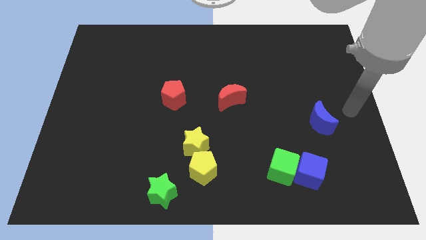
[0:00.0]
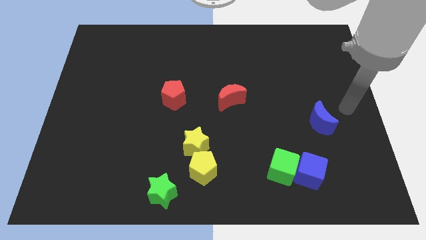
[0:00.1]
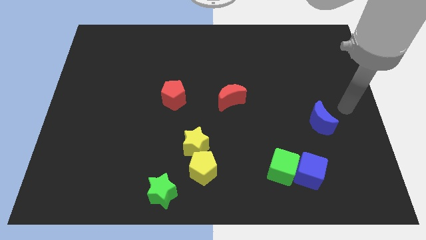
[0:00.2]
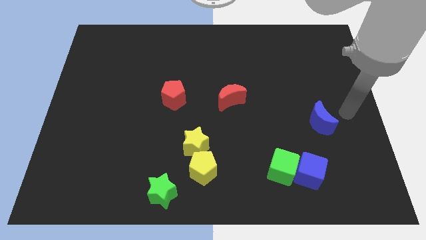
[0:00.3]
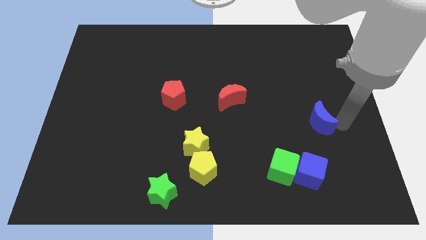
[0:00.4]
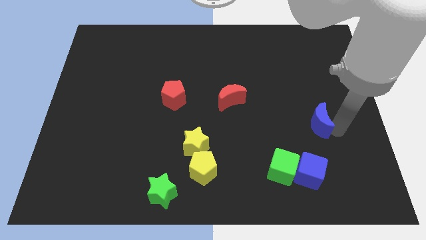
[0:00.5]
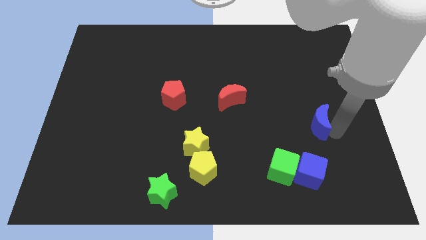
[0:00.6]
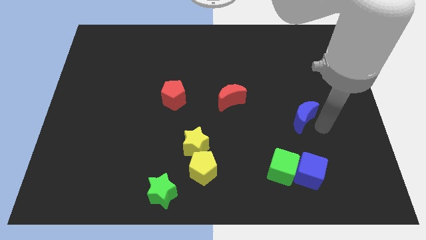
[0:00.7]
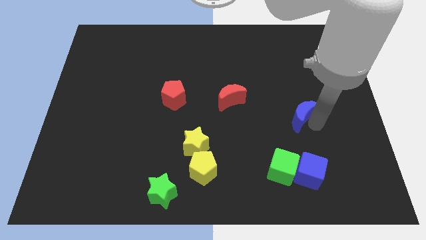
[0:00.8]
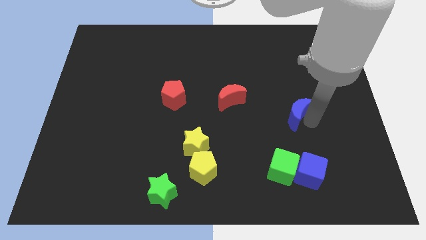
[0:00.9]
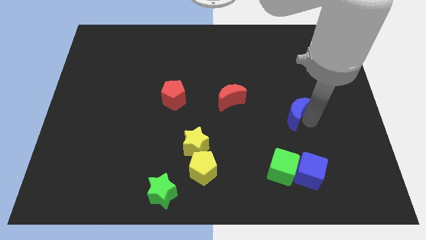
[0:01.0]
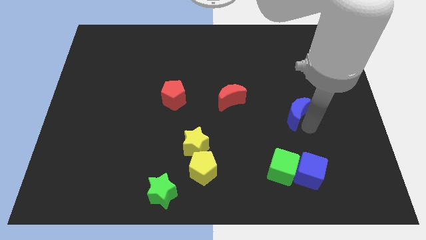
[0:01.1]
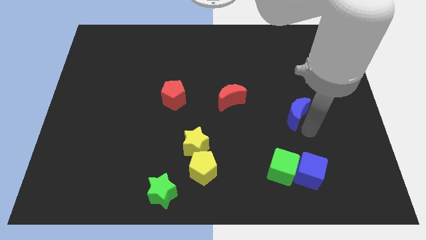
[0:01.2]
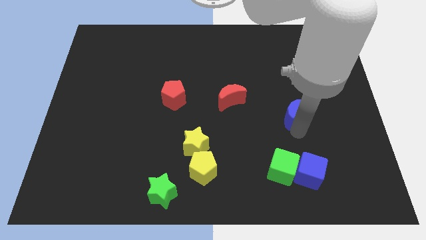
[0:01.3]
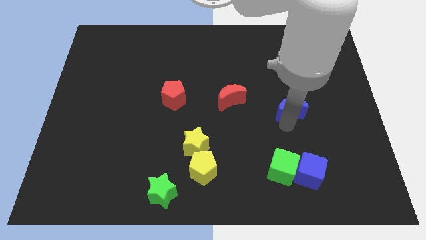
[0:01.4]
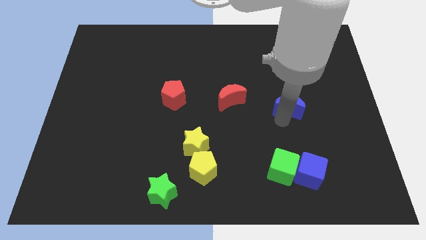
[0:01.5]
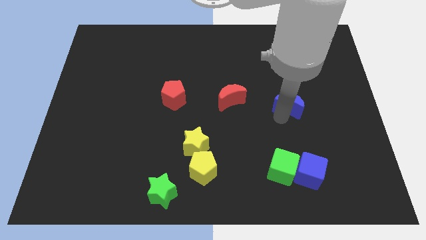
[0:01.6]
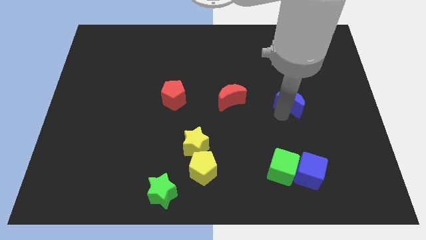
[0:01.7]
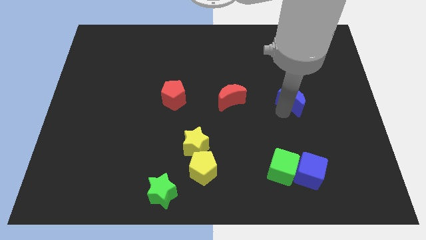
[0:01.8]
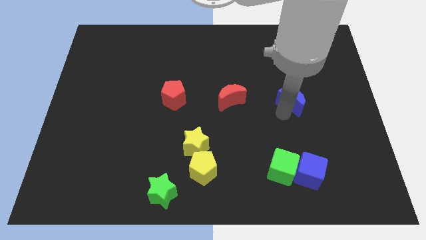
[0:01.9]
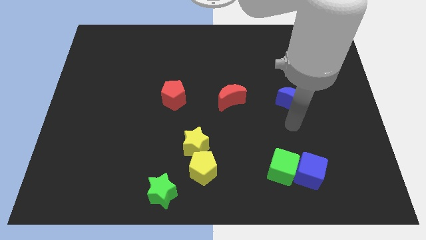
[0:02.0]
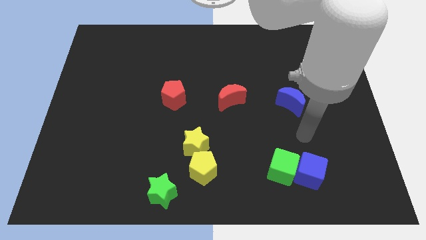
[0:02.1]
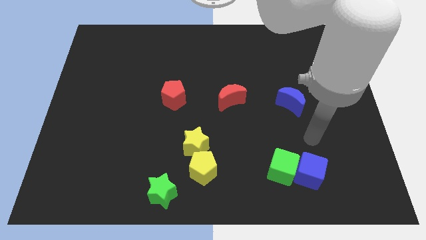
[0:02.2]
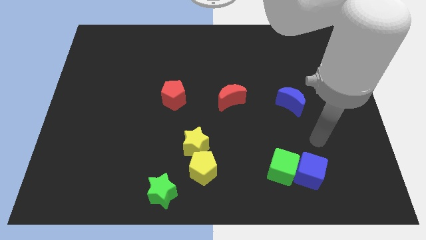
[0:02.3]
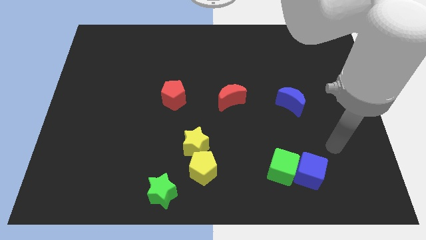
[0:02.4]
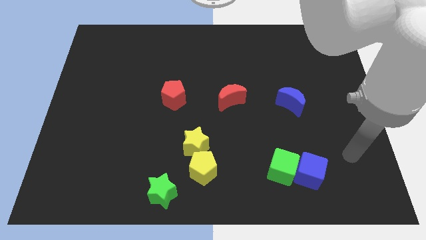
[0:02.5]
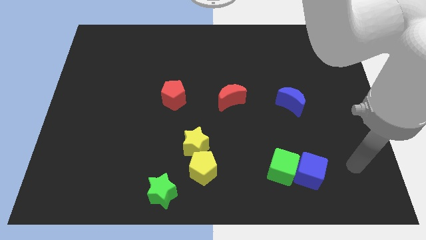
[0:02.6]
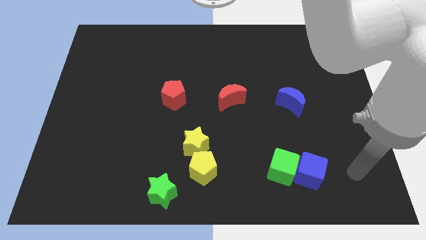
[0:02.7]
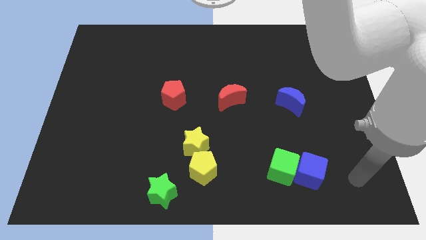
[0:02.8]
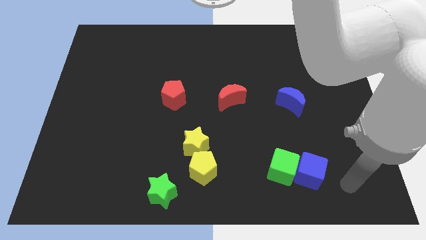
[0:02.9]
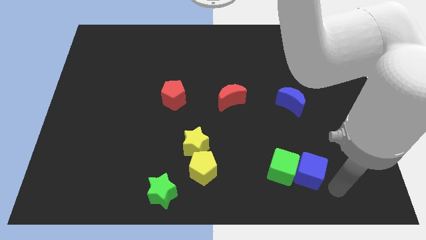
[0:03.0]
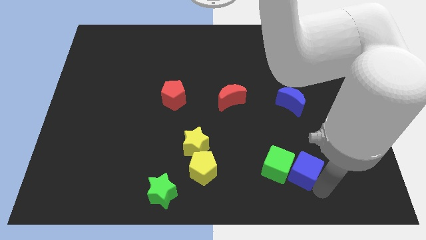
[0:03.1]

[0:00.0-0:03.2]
put the blue moon vertically above the green cube

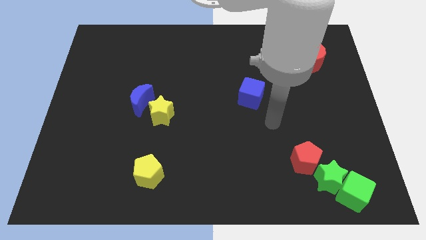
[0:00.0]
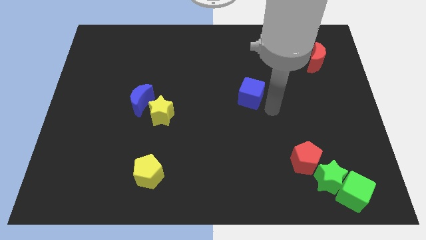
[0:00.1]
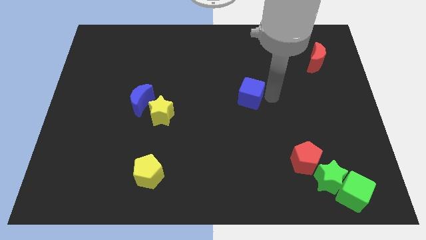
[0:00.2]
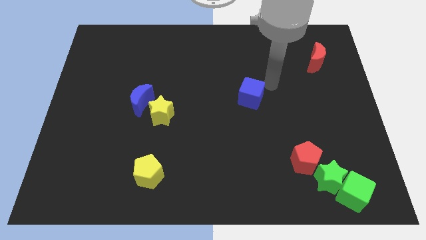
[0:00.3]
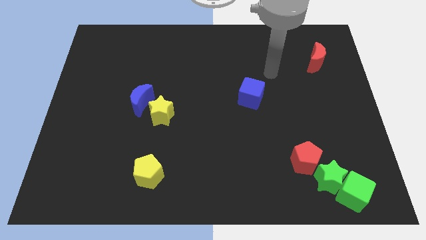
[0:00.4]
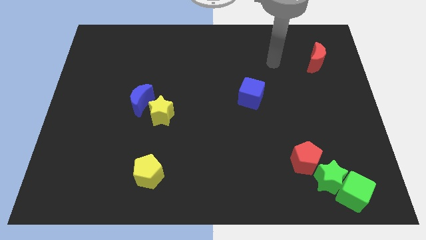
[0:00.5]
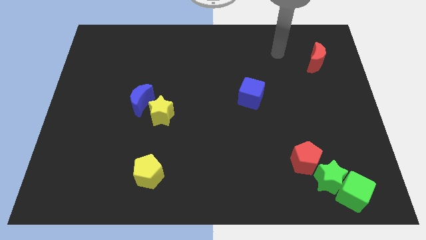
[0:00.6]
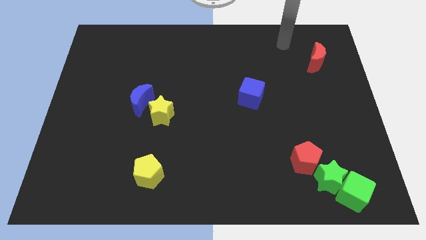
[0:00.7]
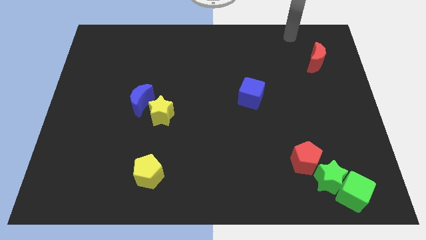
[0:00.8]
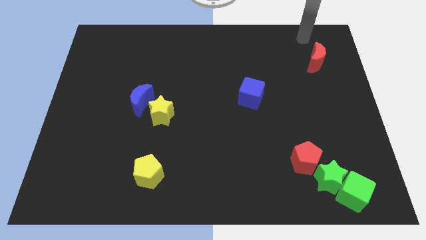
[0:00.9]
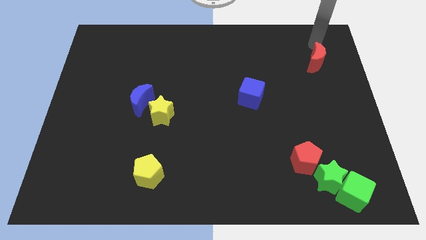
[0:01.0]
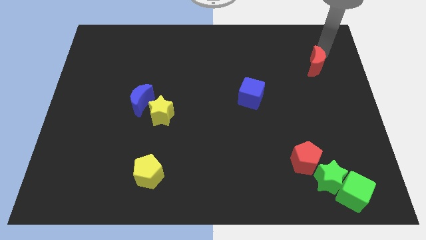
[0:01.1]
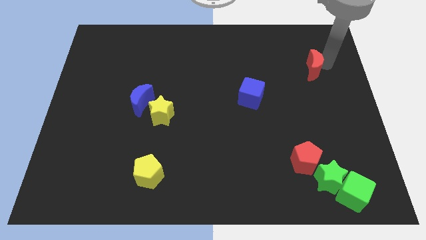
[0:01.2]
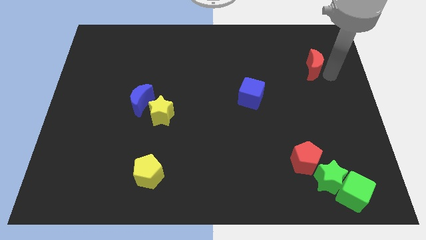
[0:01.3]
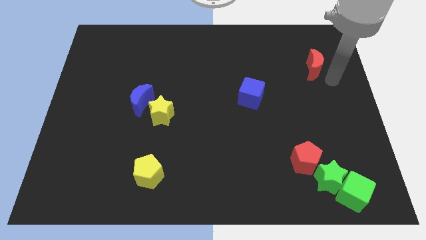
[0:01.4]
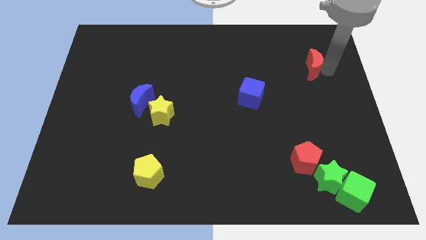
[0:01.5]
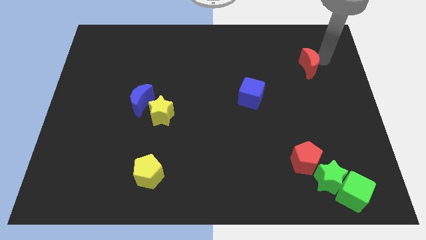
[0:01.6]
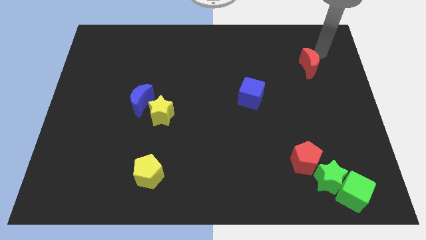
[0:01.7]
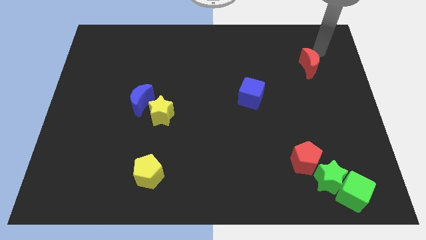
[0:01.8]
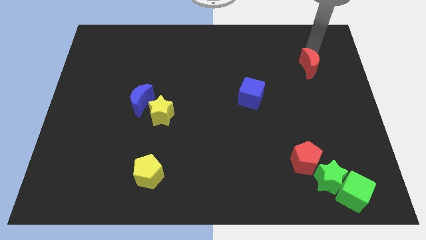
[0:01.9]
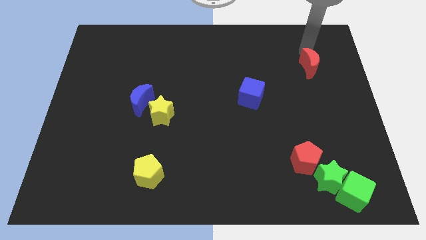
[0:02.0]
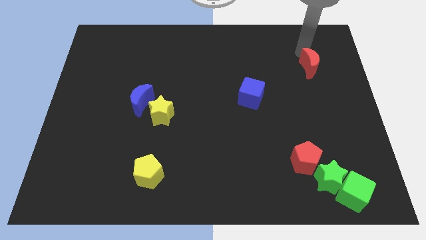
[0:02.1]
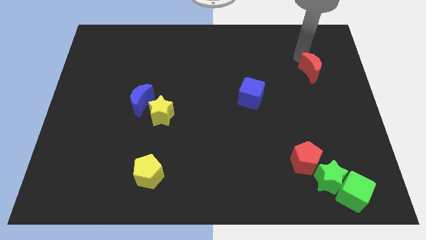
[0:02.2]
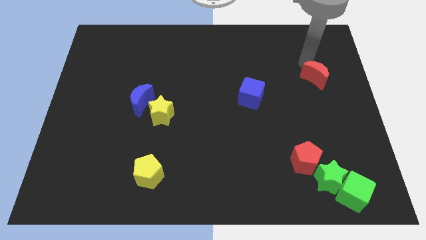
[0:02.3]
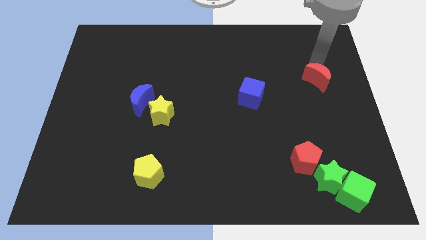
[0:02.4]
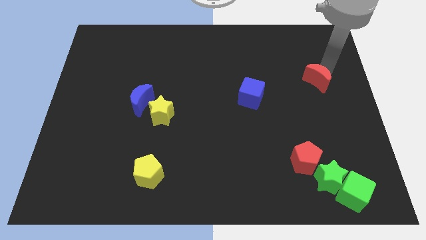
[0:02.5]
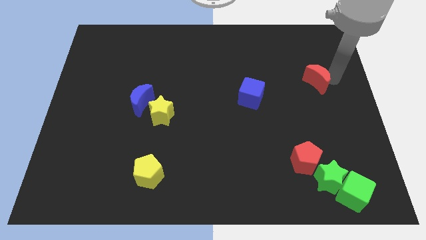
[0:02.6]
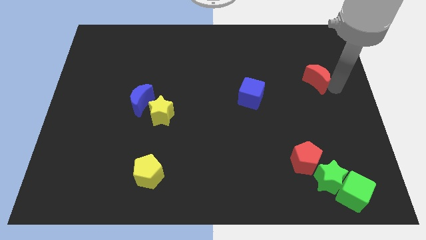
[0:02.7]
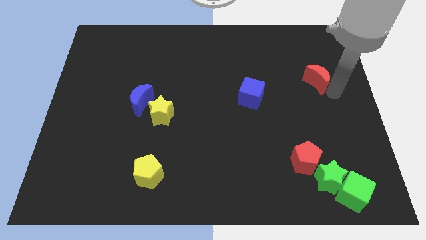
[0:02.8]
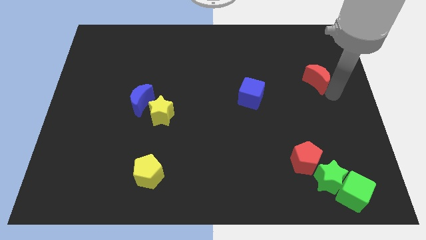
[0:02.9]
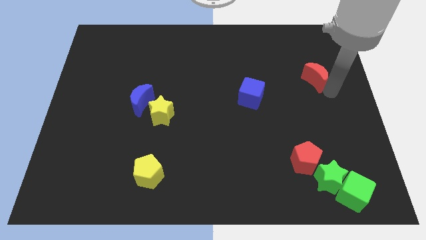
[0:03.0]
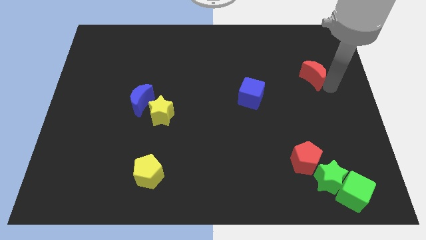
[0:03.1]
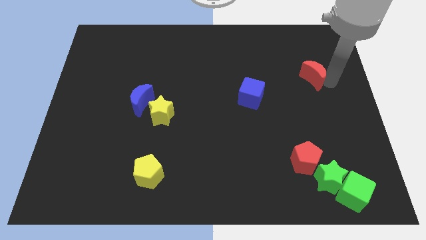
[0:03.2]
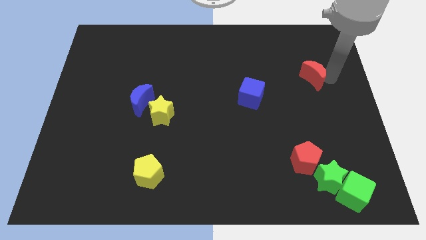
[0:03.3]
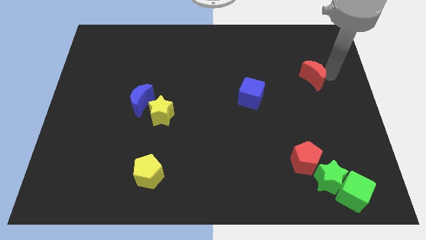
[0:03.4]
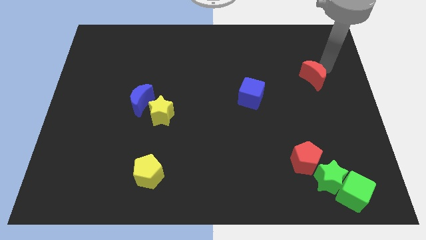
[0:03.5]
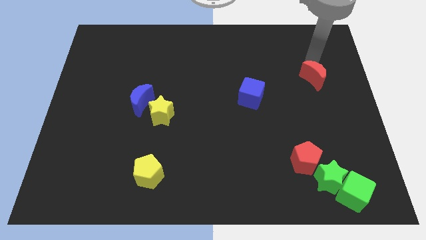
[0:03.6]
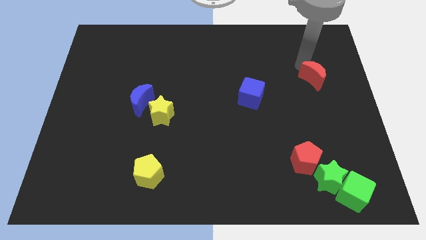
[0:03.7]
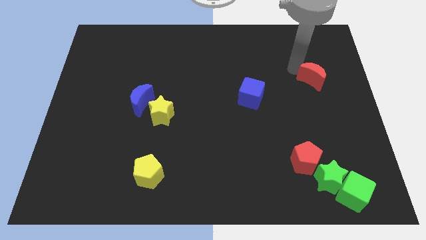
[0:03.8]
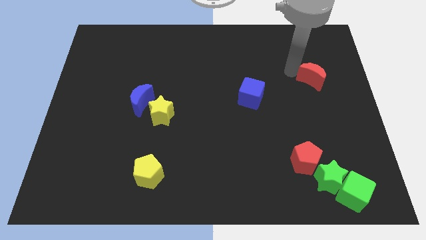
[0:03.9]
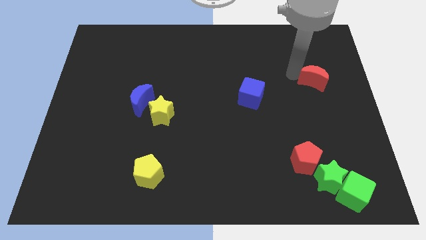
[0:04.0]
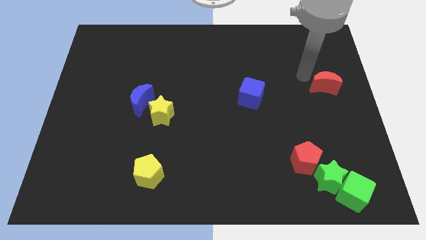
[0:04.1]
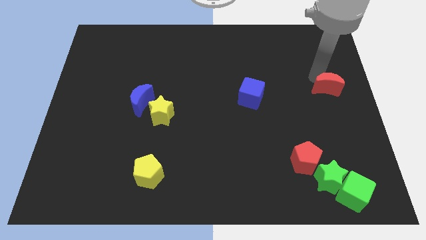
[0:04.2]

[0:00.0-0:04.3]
push the red crescent towards the center right side of the board

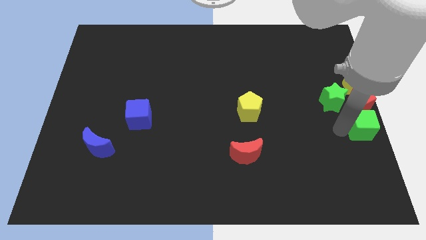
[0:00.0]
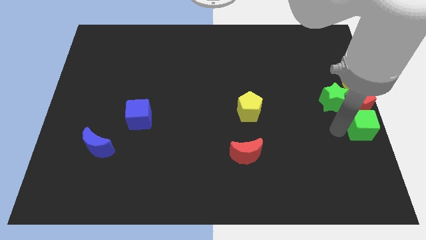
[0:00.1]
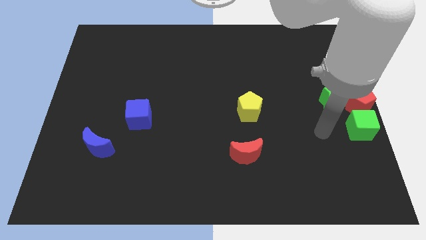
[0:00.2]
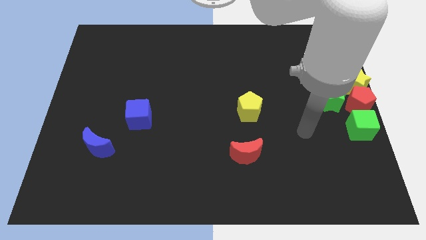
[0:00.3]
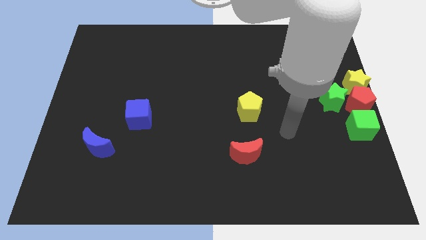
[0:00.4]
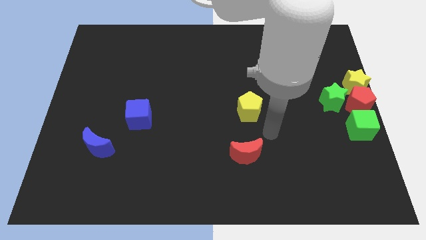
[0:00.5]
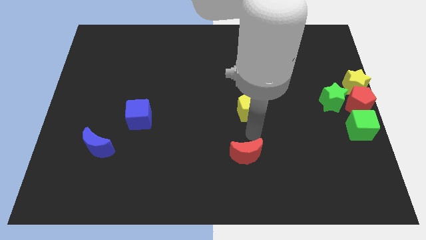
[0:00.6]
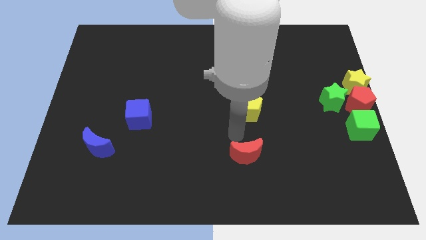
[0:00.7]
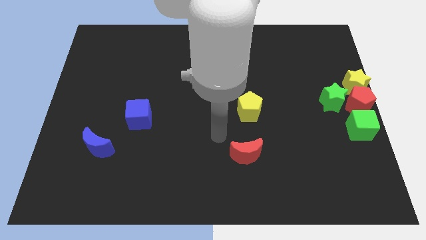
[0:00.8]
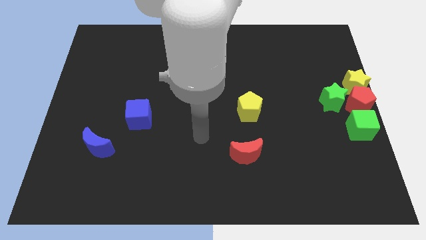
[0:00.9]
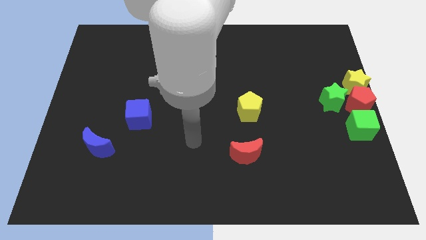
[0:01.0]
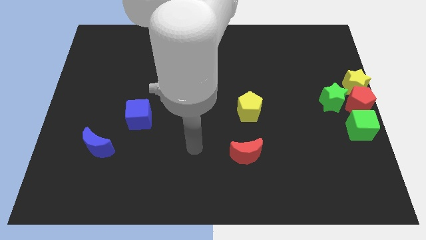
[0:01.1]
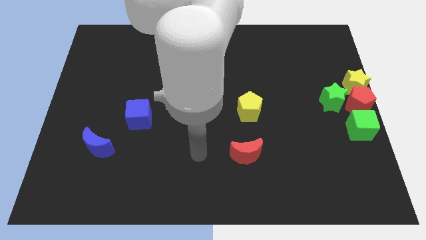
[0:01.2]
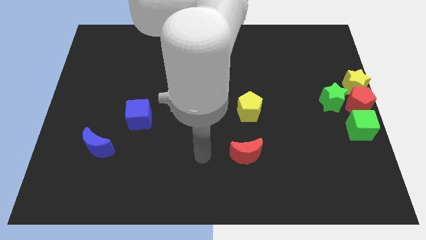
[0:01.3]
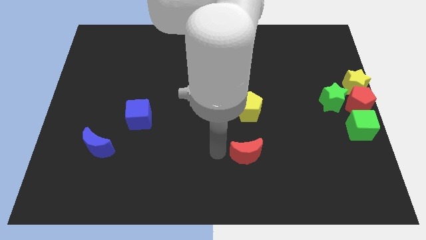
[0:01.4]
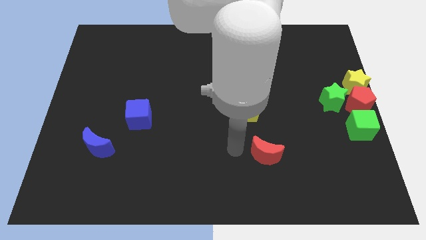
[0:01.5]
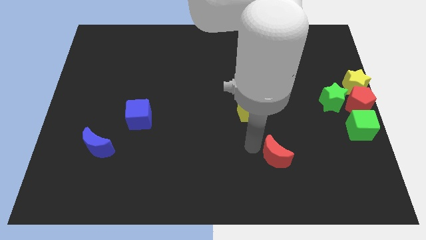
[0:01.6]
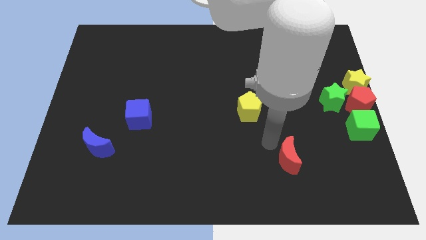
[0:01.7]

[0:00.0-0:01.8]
slightly push red crescent towards the right
